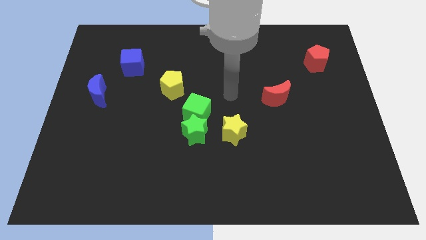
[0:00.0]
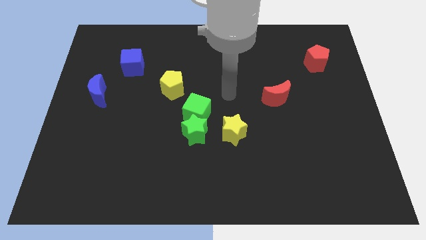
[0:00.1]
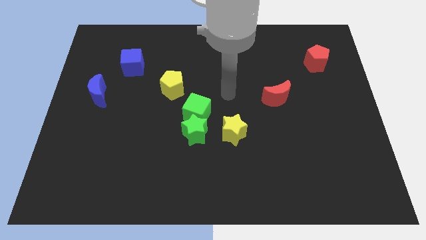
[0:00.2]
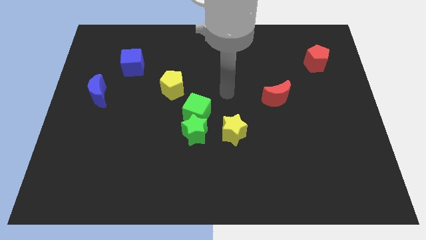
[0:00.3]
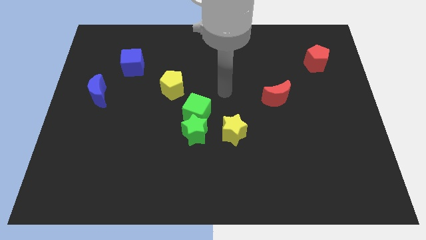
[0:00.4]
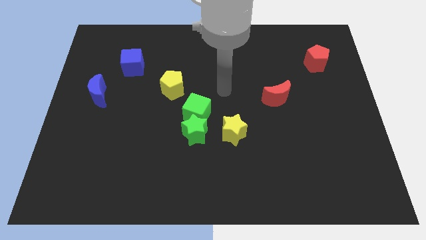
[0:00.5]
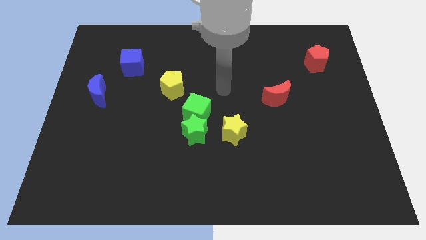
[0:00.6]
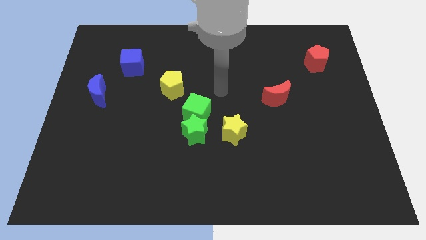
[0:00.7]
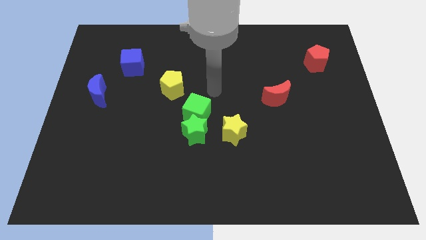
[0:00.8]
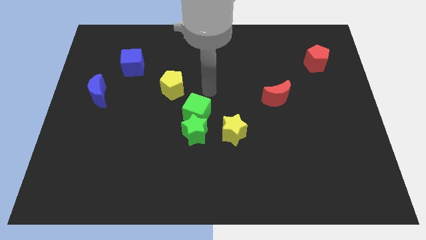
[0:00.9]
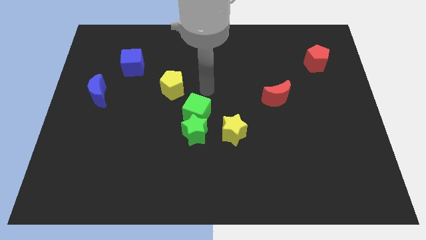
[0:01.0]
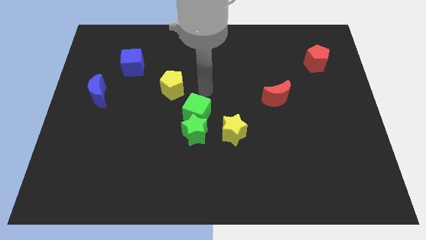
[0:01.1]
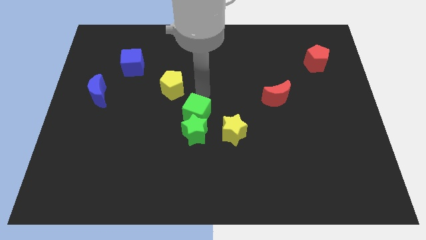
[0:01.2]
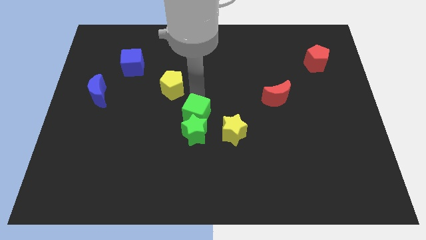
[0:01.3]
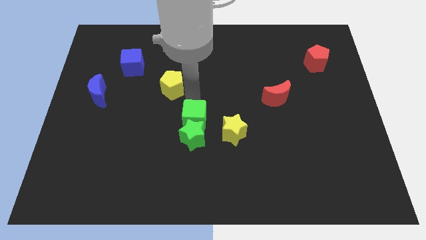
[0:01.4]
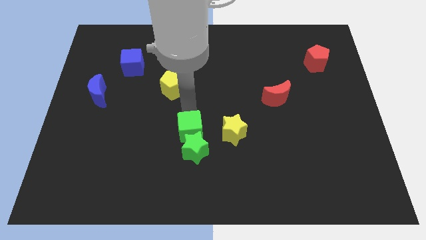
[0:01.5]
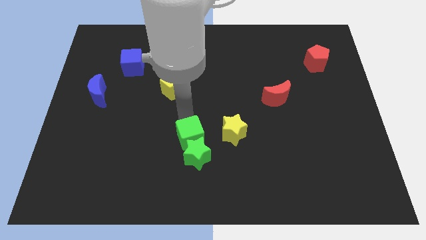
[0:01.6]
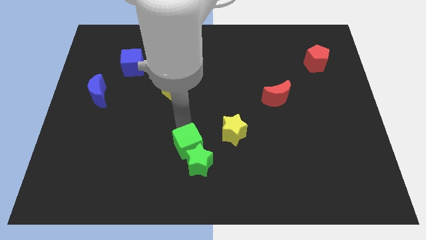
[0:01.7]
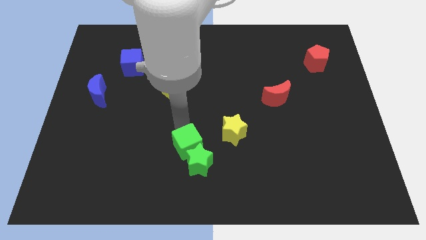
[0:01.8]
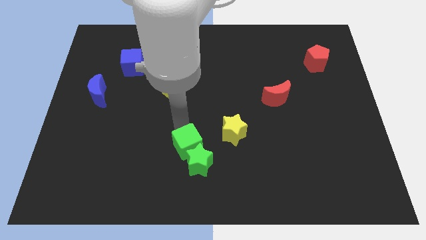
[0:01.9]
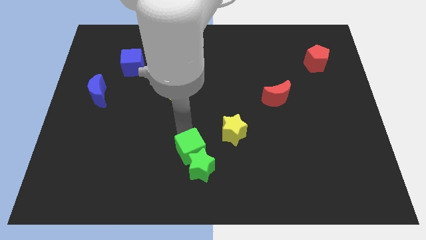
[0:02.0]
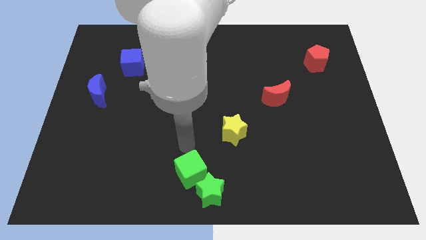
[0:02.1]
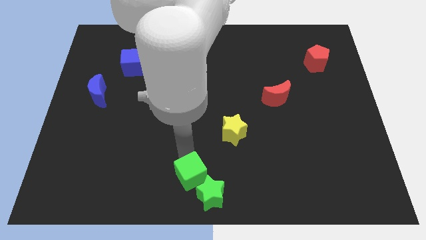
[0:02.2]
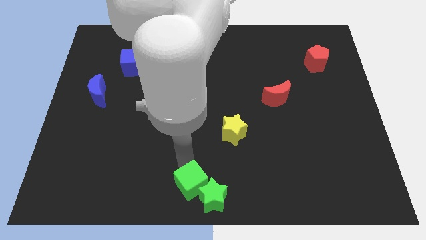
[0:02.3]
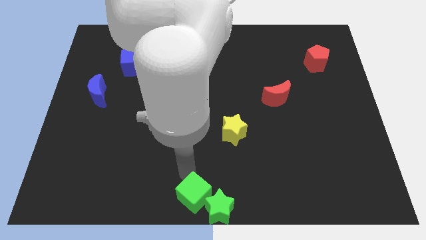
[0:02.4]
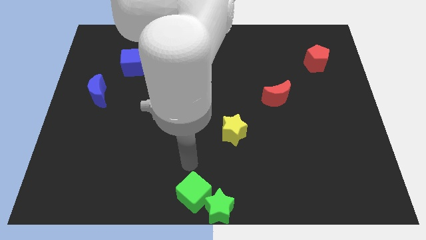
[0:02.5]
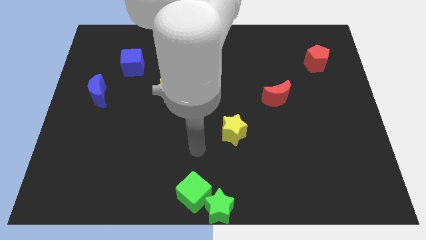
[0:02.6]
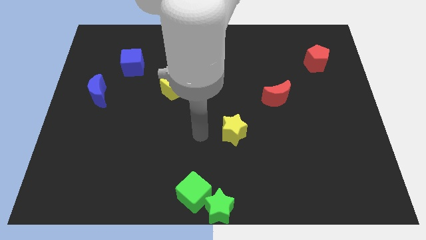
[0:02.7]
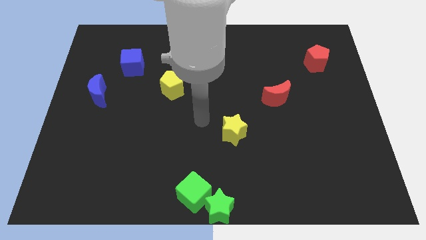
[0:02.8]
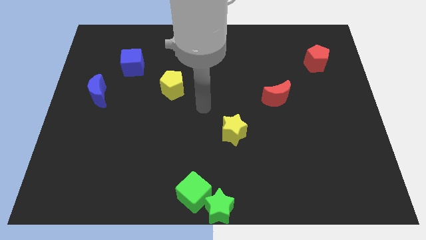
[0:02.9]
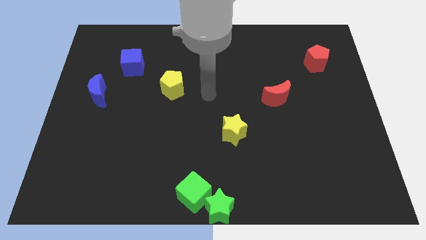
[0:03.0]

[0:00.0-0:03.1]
push the green blocks to the bottom center of the board

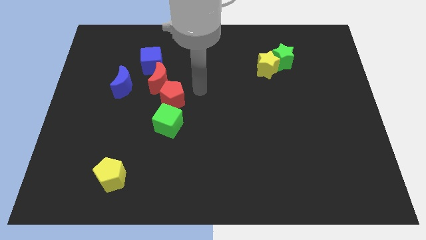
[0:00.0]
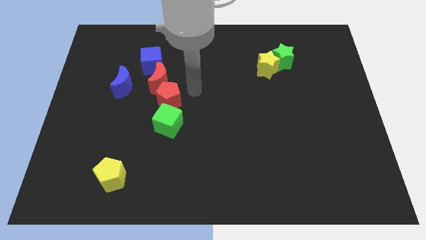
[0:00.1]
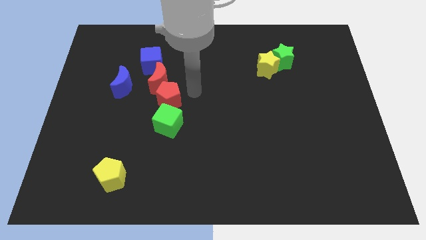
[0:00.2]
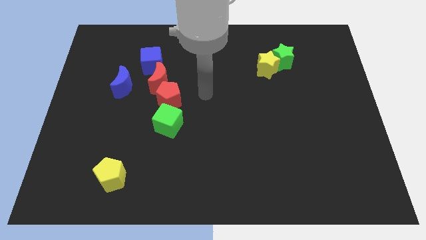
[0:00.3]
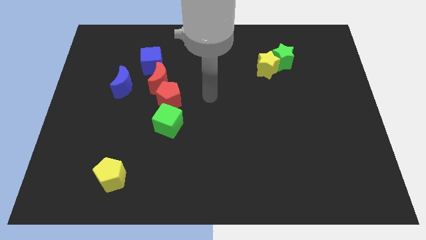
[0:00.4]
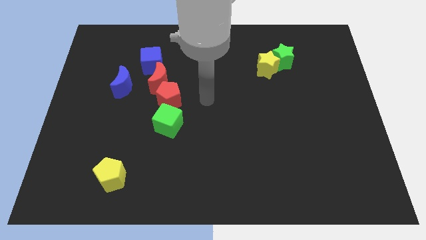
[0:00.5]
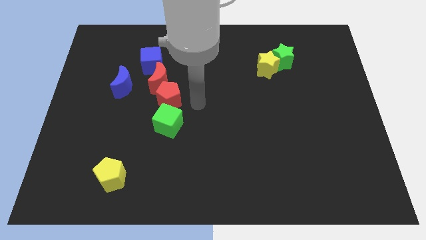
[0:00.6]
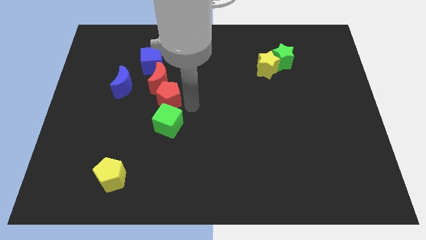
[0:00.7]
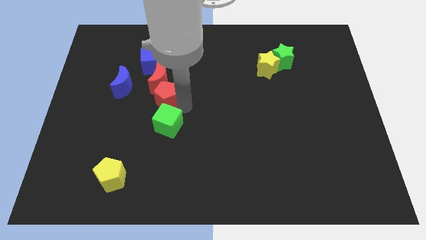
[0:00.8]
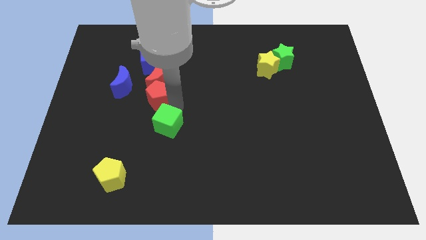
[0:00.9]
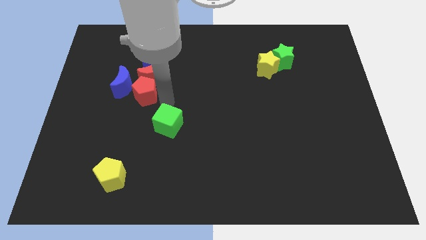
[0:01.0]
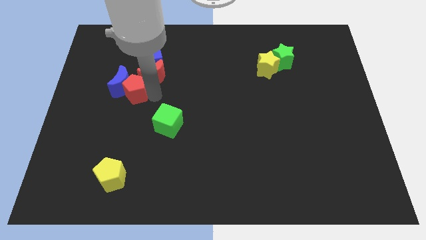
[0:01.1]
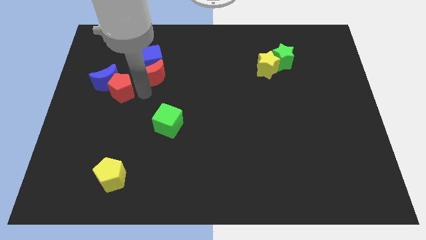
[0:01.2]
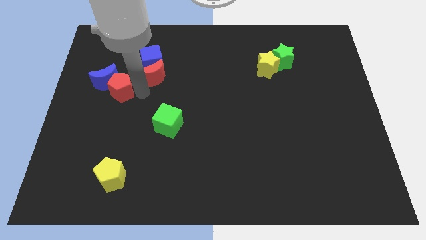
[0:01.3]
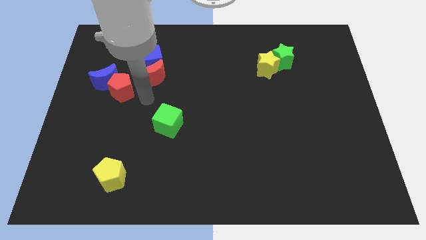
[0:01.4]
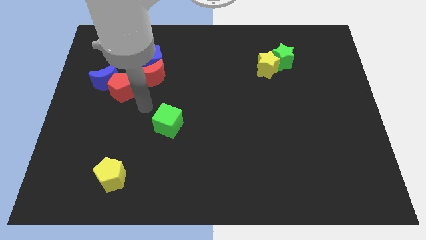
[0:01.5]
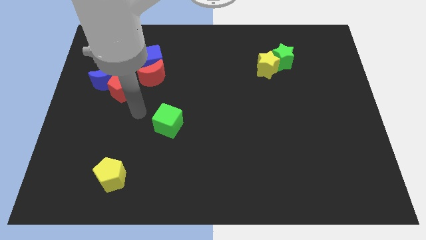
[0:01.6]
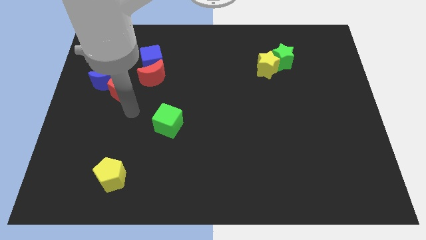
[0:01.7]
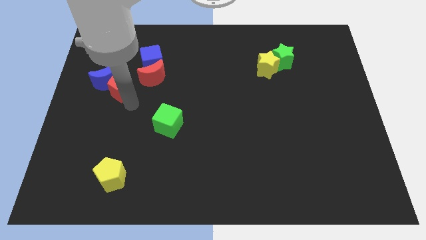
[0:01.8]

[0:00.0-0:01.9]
push the red pentagon into the blue moon

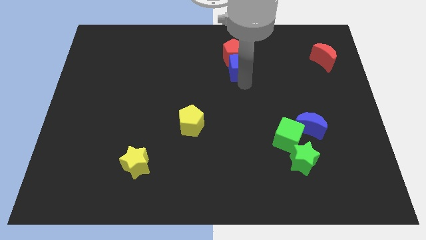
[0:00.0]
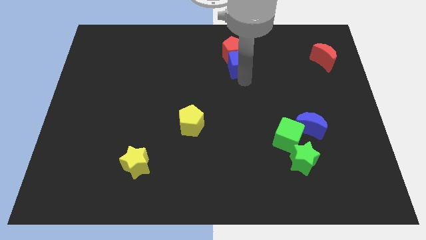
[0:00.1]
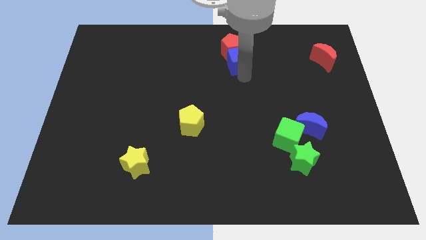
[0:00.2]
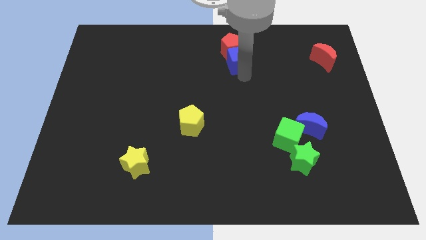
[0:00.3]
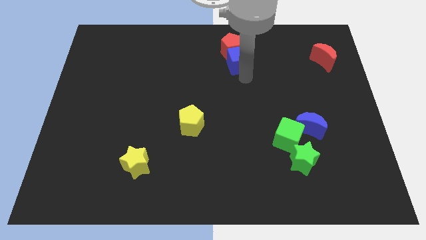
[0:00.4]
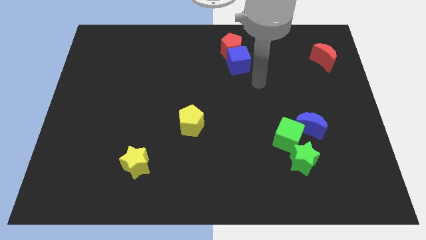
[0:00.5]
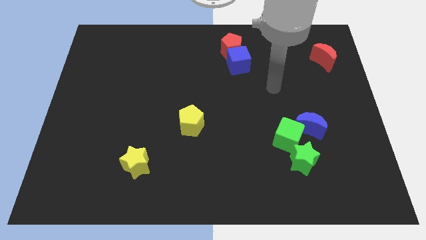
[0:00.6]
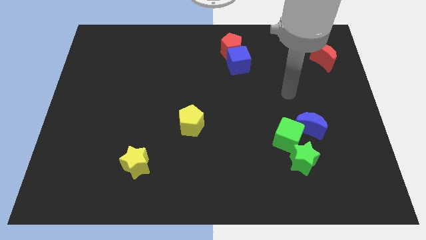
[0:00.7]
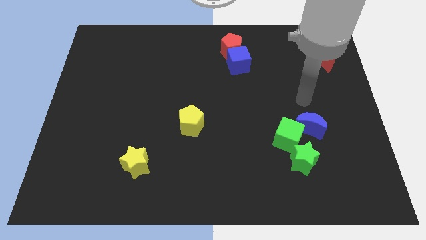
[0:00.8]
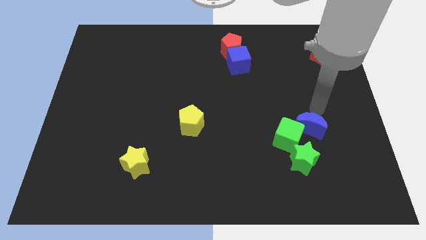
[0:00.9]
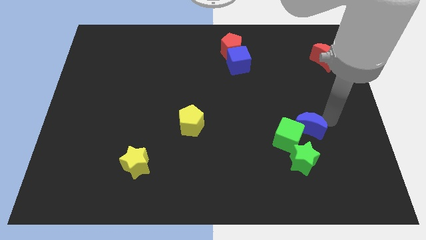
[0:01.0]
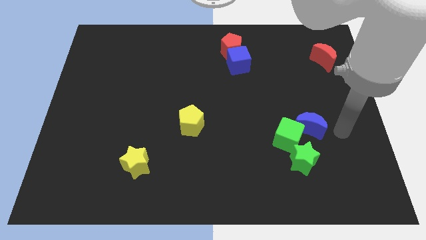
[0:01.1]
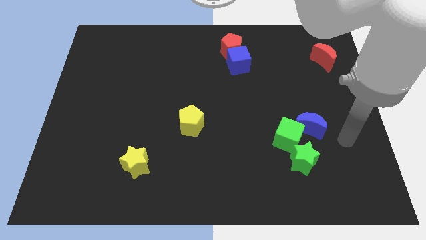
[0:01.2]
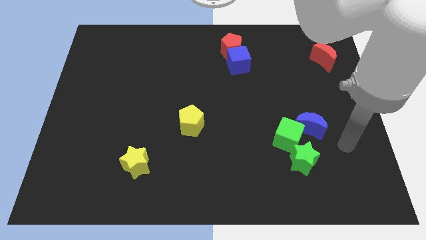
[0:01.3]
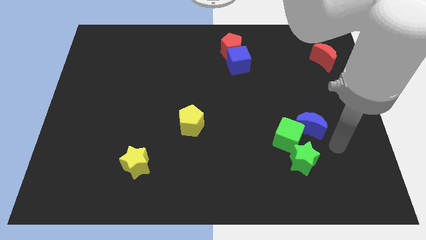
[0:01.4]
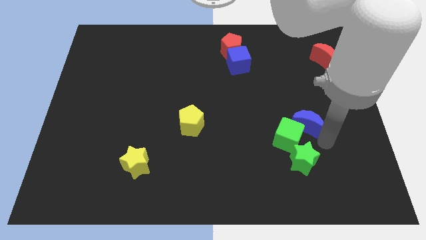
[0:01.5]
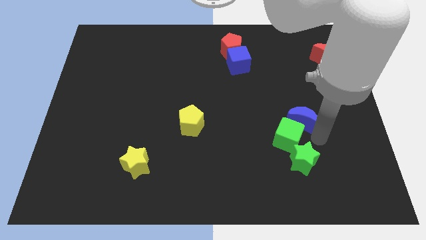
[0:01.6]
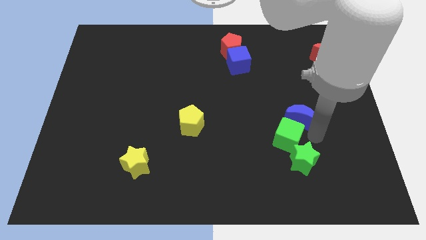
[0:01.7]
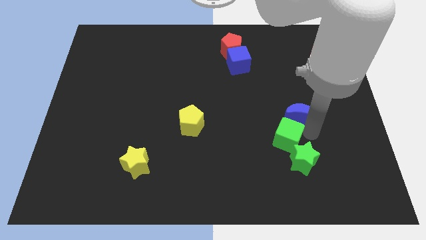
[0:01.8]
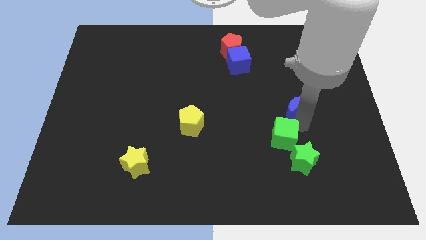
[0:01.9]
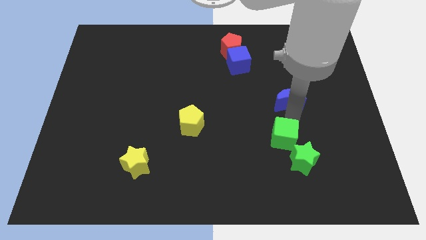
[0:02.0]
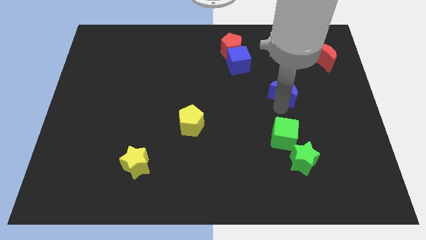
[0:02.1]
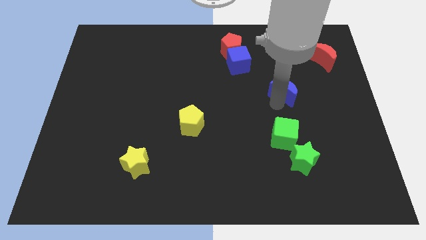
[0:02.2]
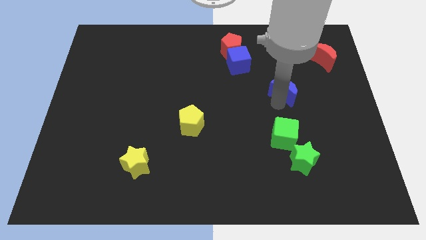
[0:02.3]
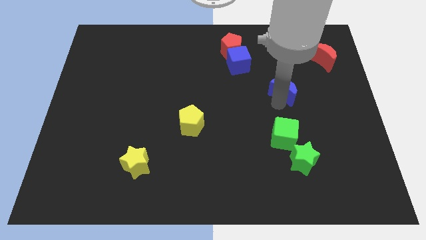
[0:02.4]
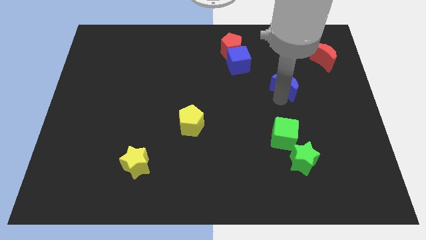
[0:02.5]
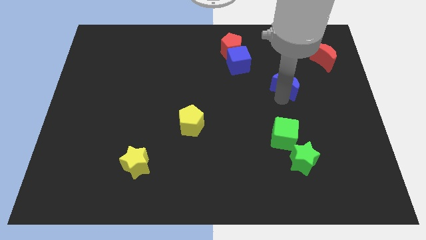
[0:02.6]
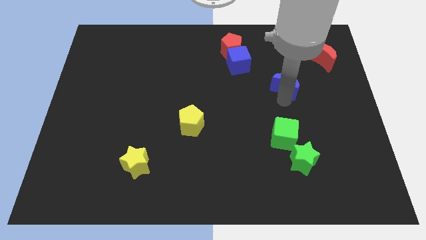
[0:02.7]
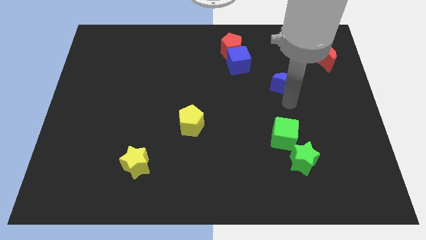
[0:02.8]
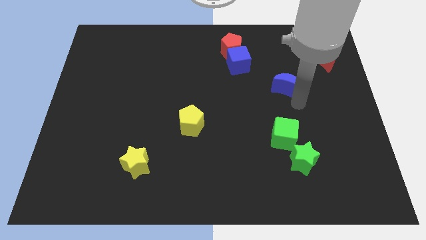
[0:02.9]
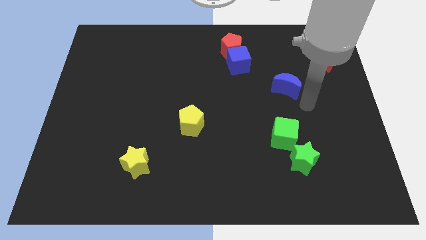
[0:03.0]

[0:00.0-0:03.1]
push the blue cube and red pentagon slightly to the top

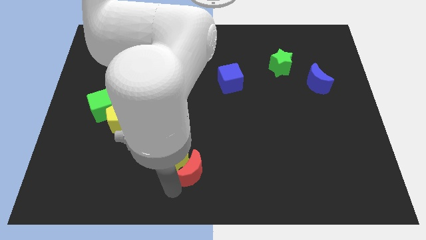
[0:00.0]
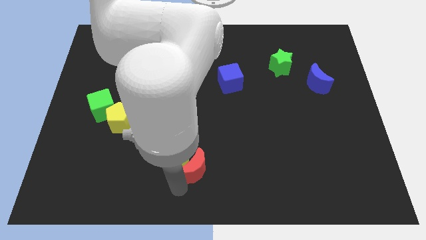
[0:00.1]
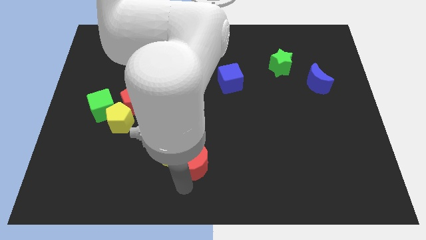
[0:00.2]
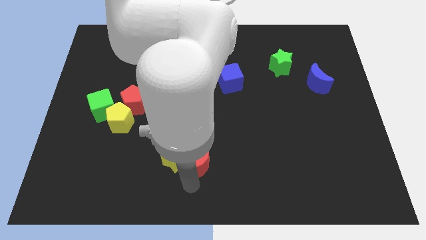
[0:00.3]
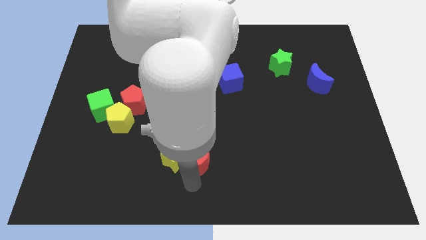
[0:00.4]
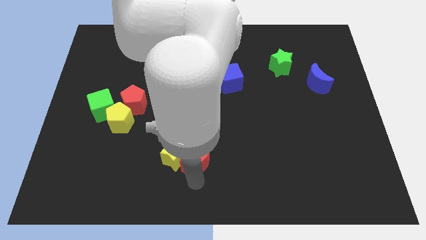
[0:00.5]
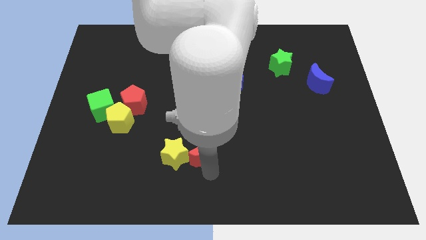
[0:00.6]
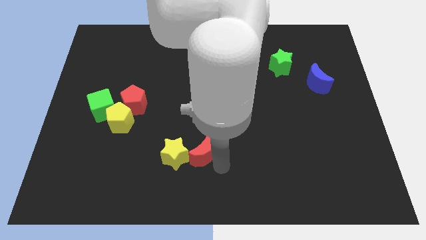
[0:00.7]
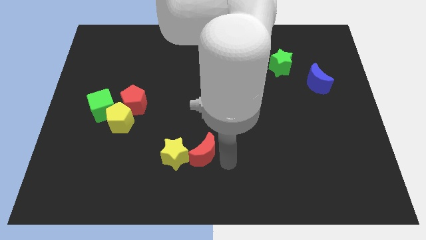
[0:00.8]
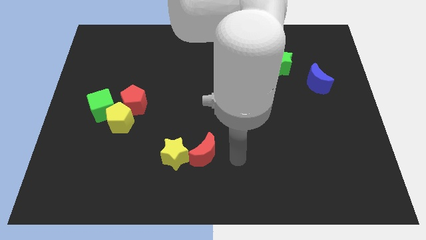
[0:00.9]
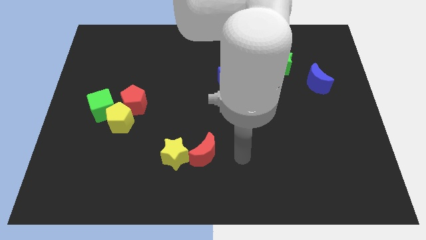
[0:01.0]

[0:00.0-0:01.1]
slightly move the red crescent right to the yellow star
